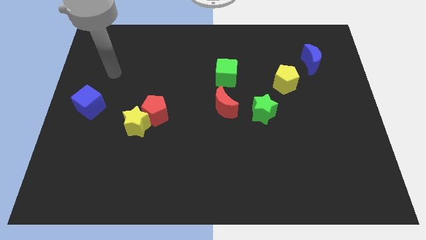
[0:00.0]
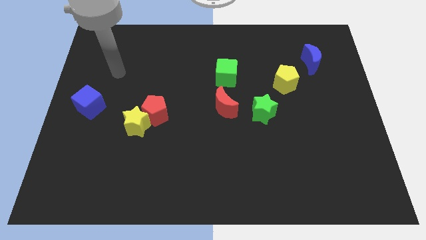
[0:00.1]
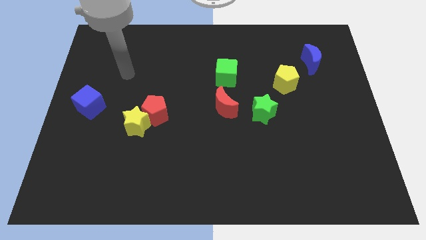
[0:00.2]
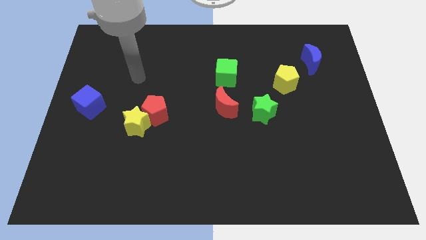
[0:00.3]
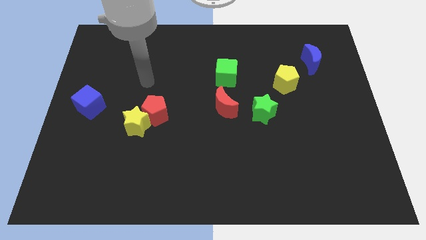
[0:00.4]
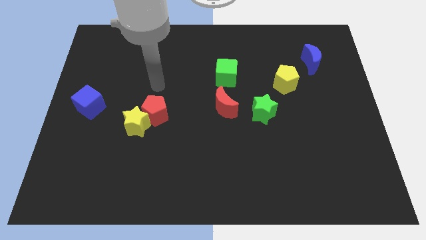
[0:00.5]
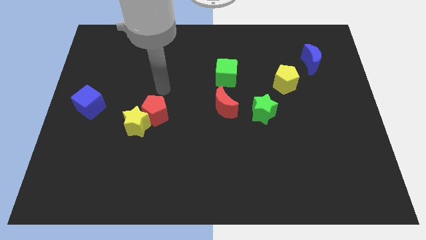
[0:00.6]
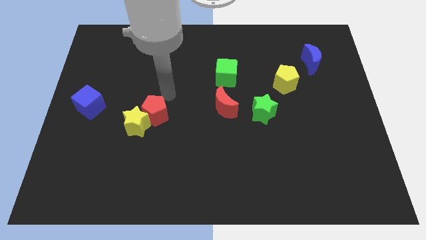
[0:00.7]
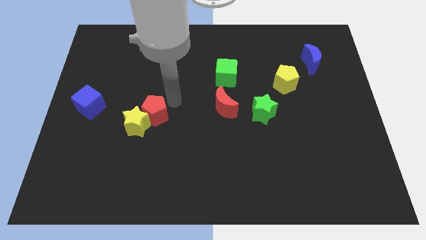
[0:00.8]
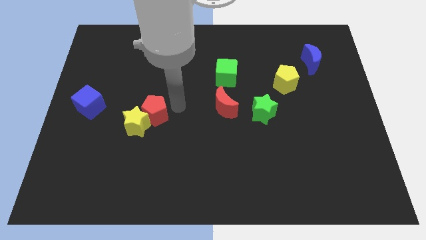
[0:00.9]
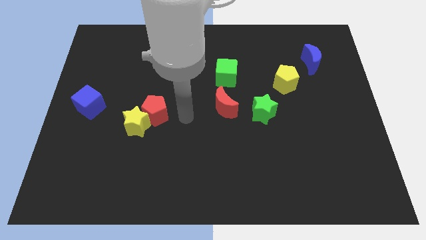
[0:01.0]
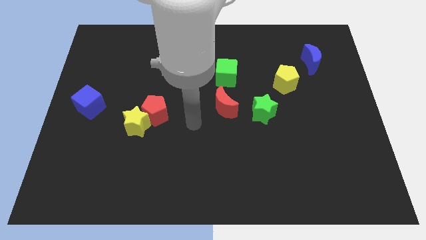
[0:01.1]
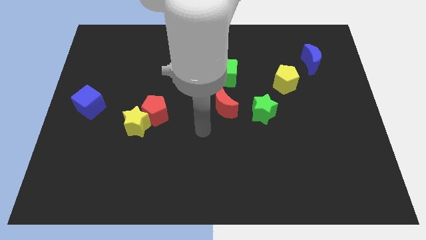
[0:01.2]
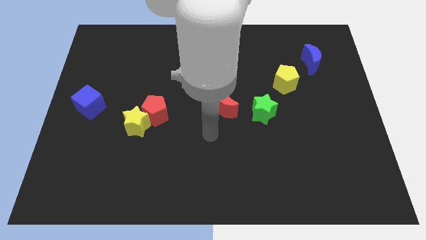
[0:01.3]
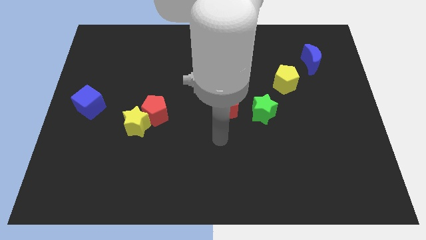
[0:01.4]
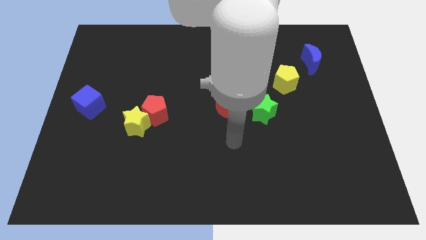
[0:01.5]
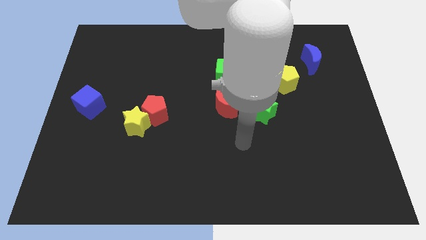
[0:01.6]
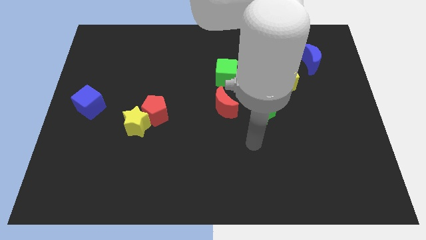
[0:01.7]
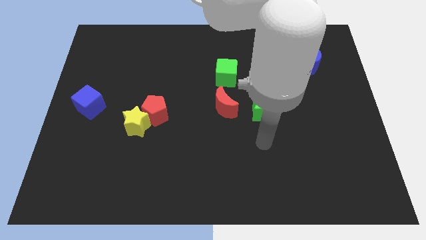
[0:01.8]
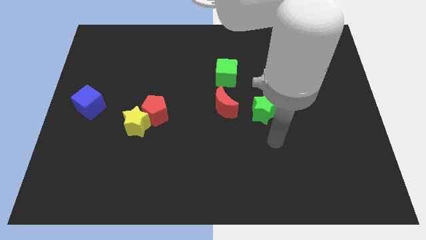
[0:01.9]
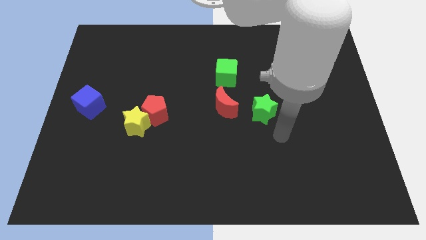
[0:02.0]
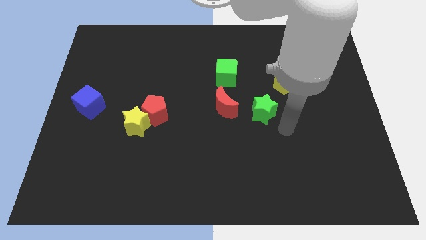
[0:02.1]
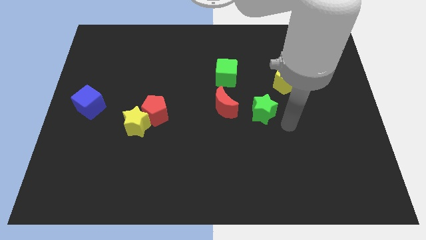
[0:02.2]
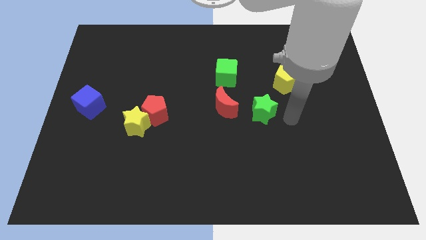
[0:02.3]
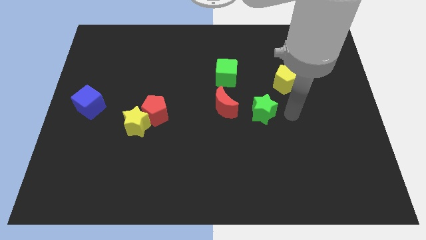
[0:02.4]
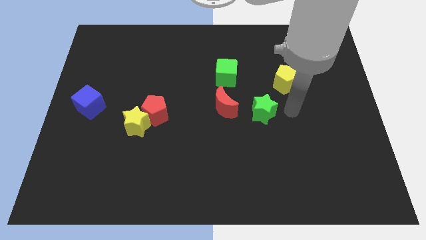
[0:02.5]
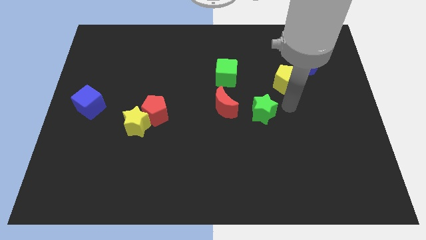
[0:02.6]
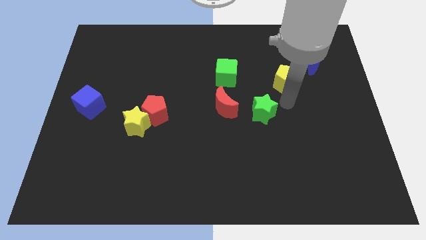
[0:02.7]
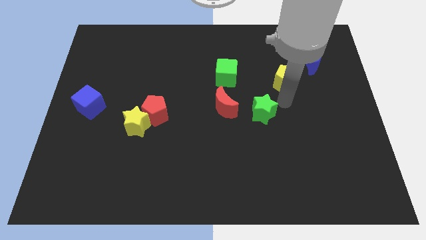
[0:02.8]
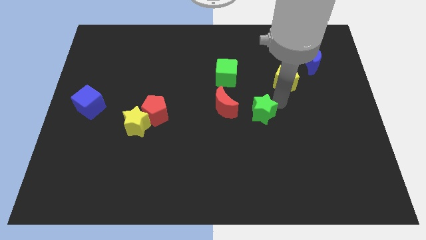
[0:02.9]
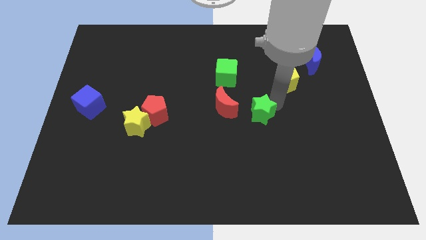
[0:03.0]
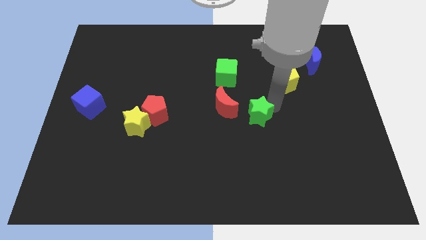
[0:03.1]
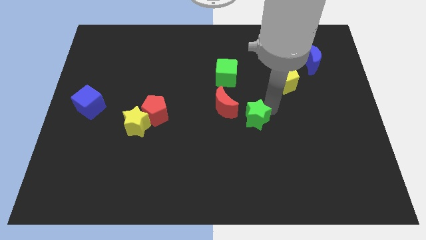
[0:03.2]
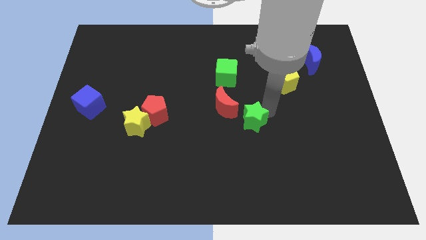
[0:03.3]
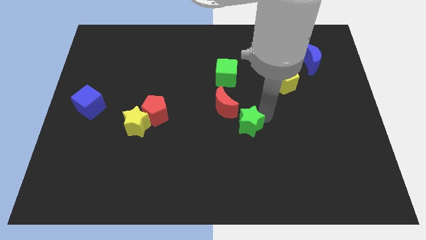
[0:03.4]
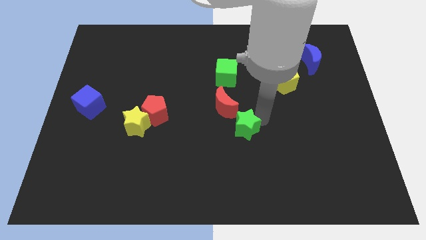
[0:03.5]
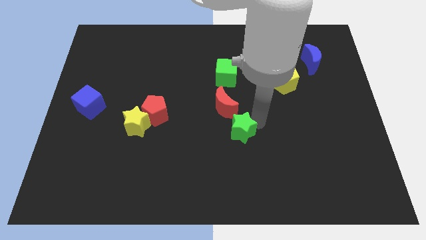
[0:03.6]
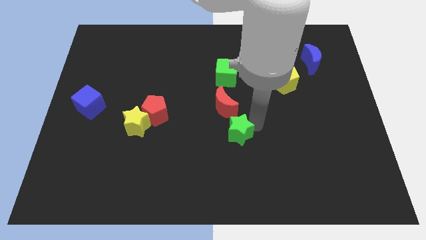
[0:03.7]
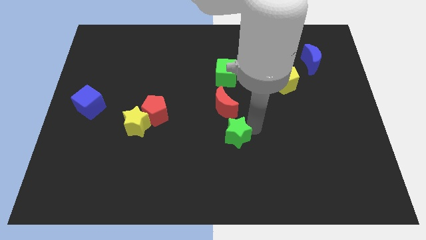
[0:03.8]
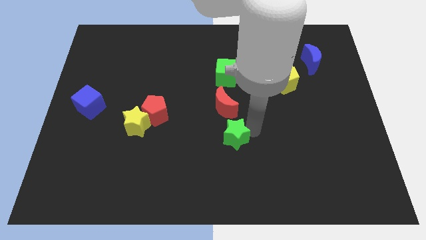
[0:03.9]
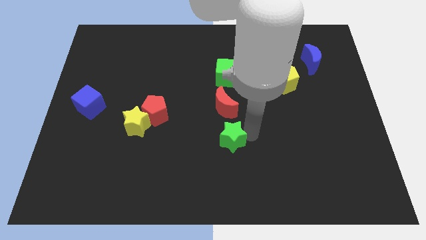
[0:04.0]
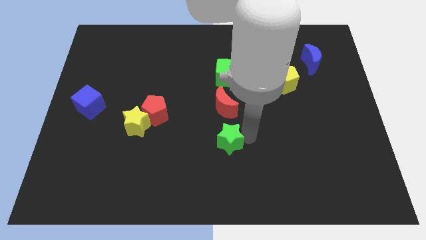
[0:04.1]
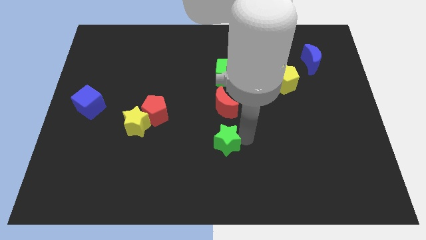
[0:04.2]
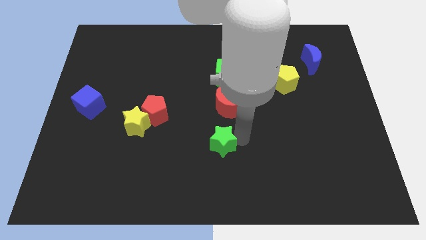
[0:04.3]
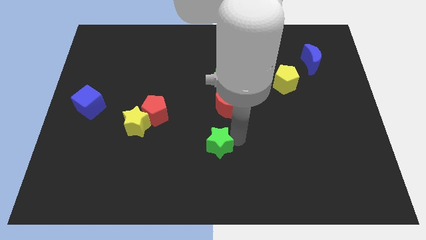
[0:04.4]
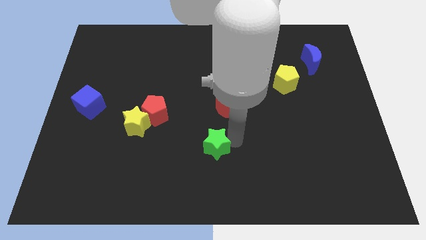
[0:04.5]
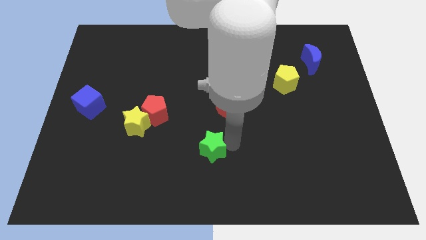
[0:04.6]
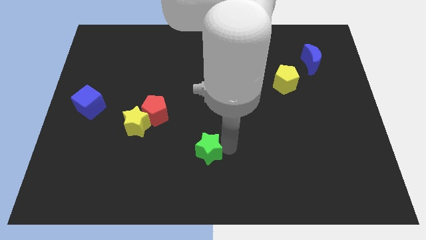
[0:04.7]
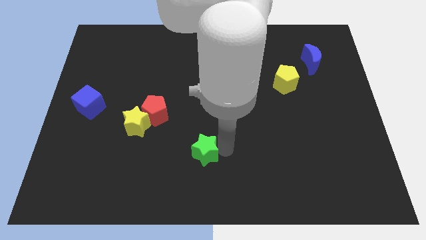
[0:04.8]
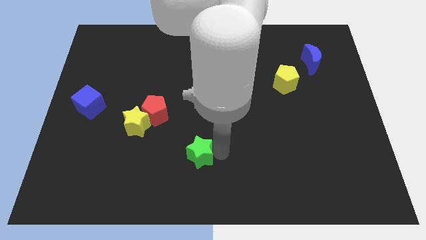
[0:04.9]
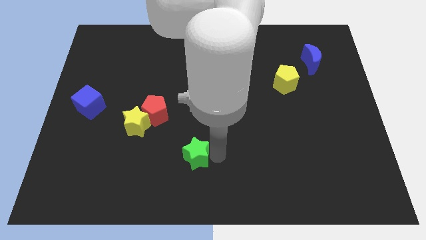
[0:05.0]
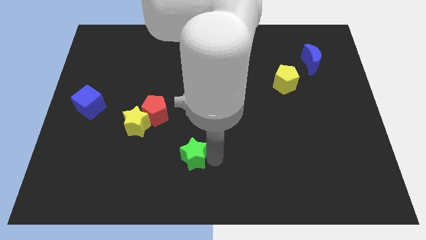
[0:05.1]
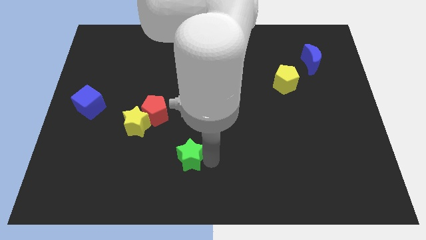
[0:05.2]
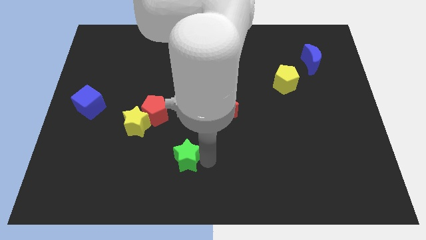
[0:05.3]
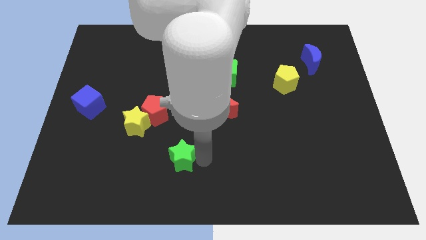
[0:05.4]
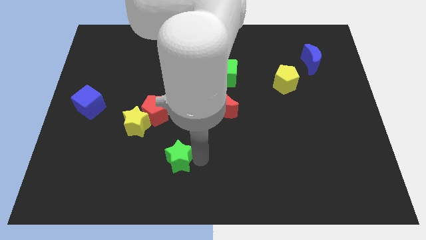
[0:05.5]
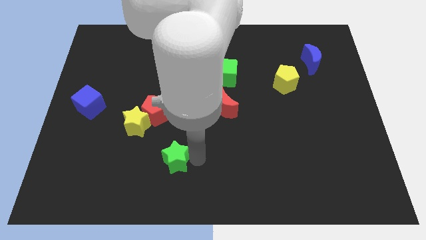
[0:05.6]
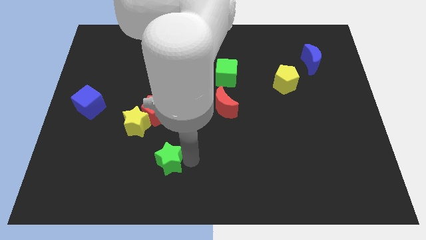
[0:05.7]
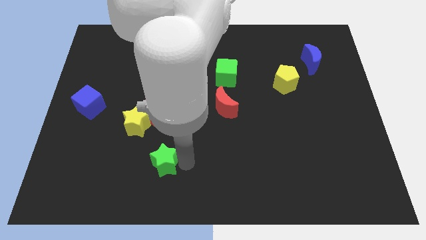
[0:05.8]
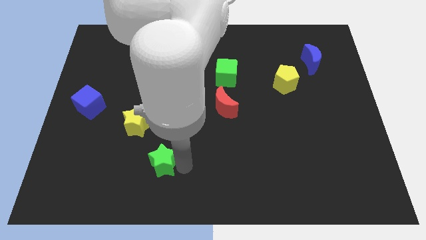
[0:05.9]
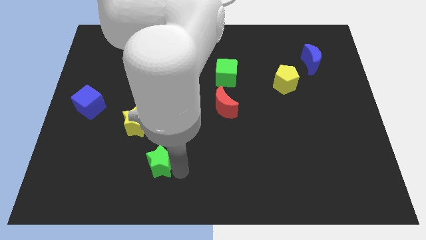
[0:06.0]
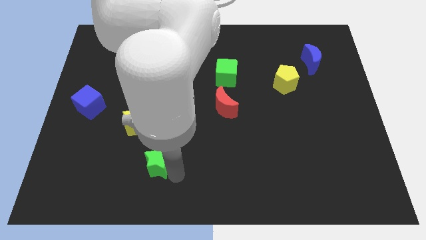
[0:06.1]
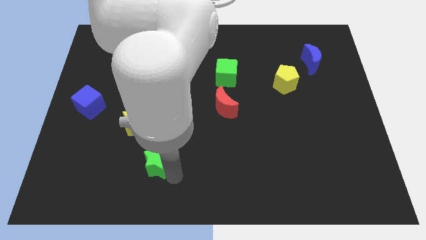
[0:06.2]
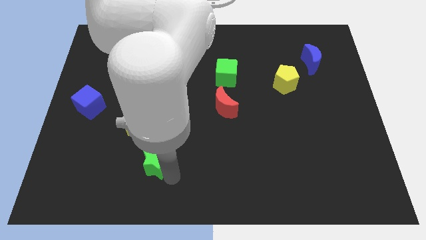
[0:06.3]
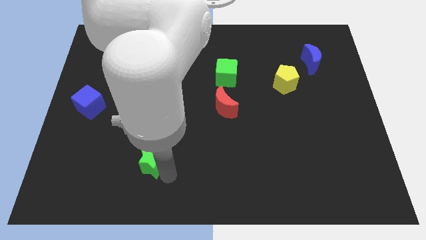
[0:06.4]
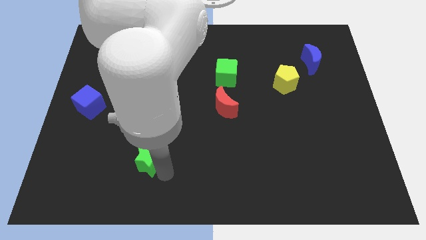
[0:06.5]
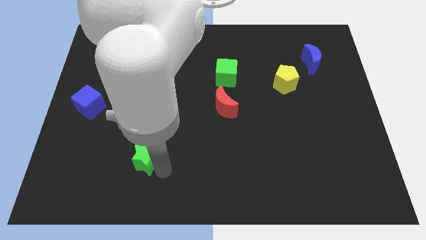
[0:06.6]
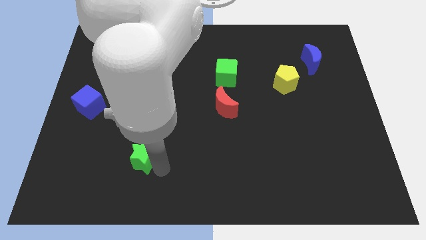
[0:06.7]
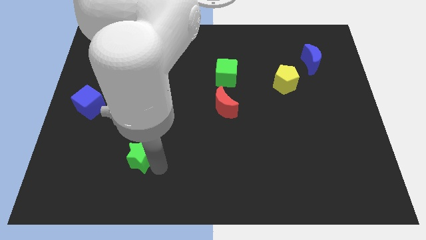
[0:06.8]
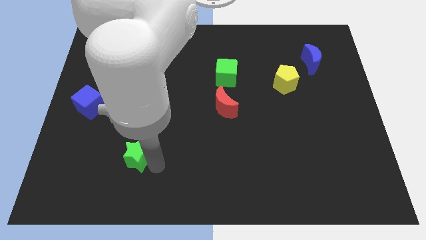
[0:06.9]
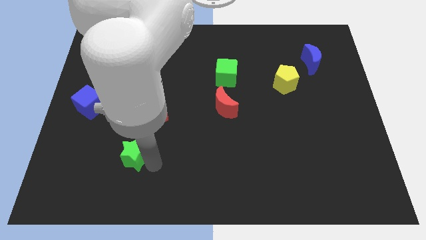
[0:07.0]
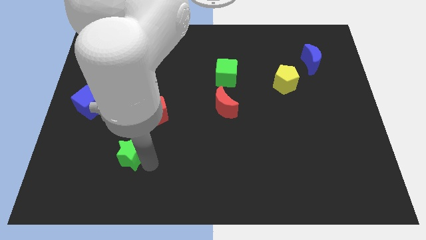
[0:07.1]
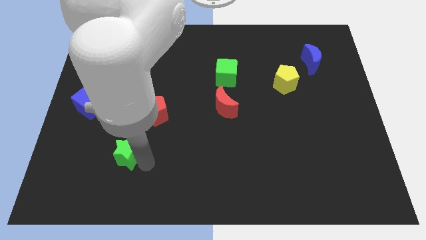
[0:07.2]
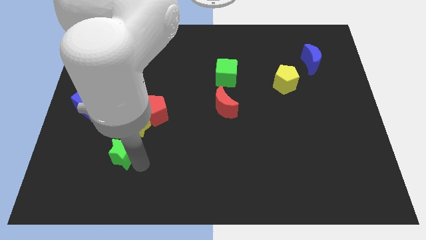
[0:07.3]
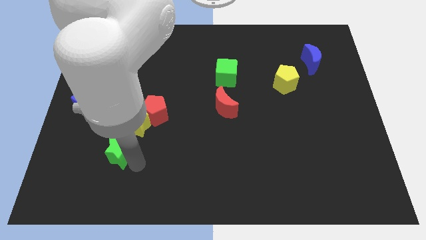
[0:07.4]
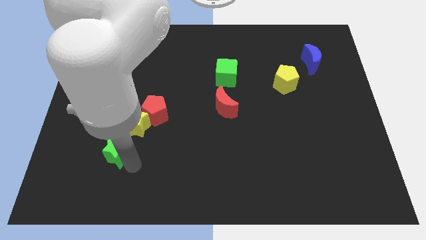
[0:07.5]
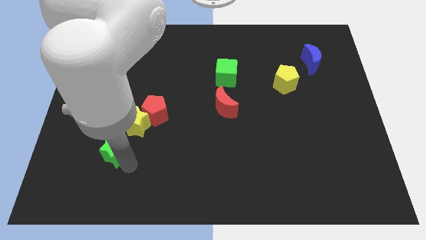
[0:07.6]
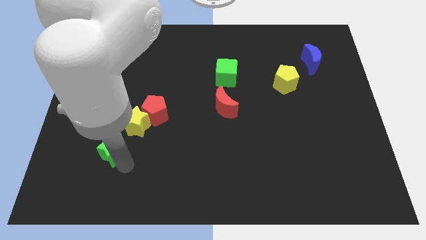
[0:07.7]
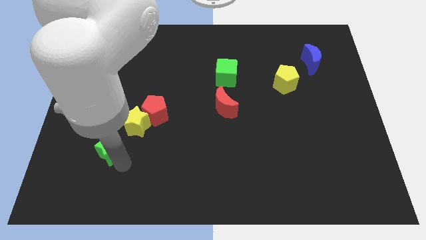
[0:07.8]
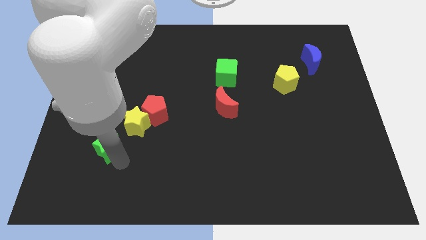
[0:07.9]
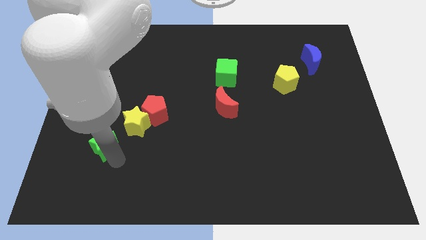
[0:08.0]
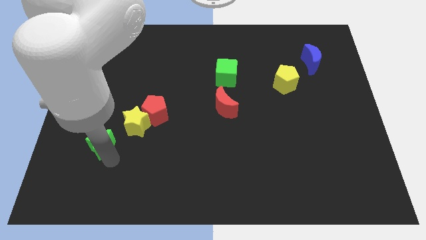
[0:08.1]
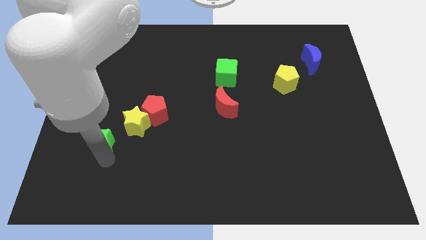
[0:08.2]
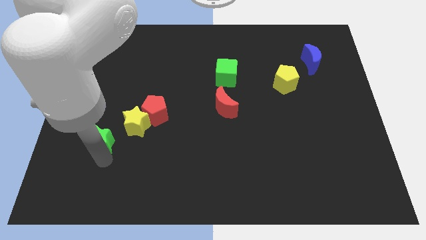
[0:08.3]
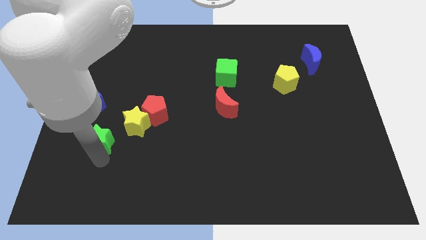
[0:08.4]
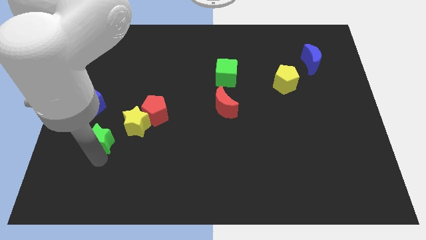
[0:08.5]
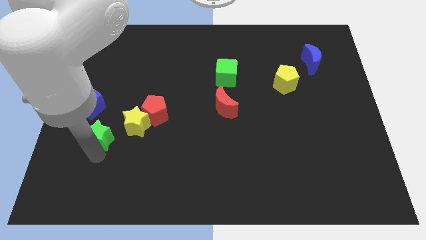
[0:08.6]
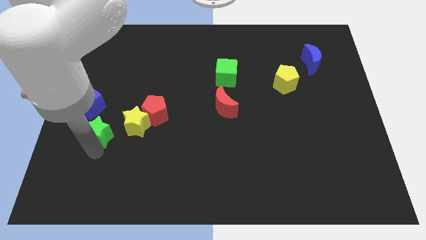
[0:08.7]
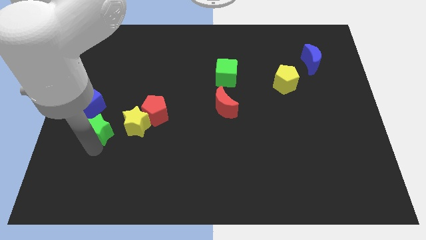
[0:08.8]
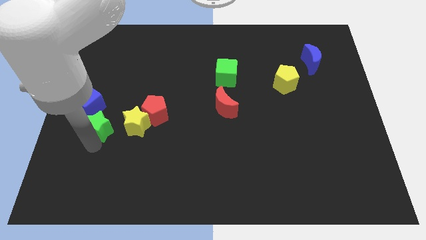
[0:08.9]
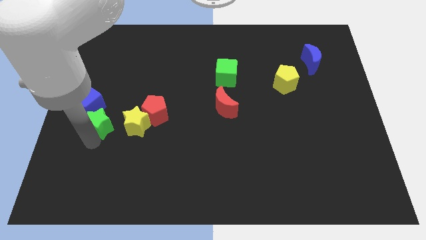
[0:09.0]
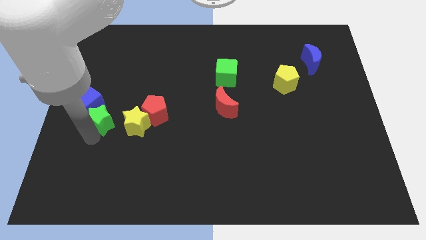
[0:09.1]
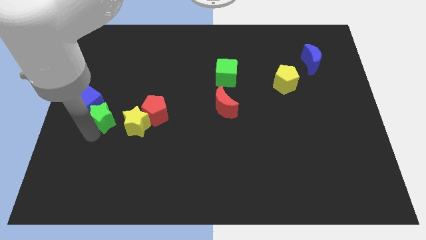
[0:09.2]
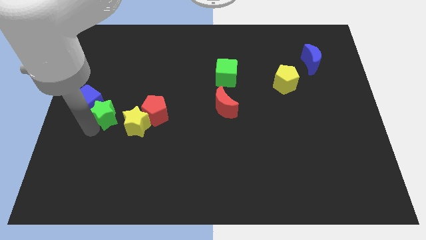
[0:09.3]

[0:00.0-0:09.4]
move the green star towards the blue cube
